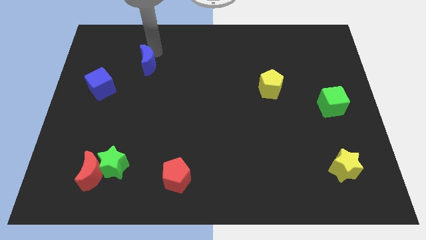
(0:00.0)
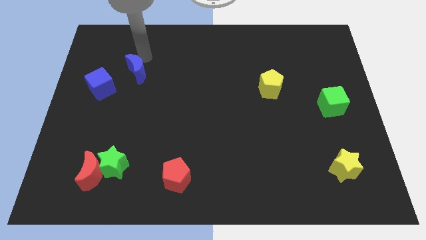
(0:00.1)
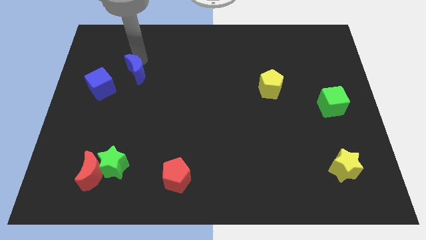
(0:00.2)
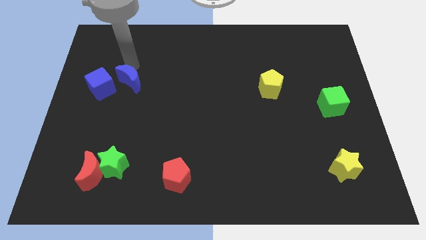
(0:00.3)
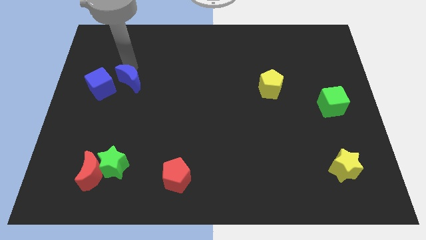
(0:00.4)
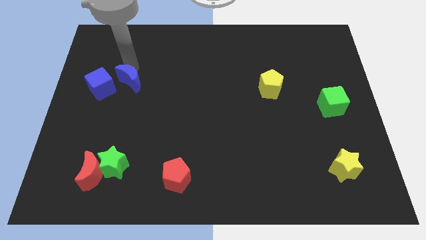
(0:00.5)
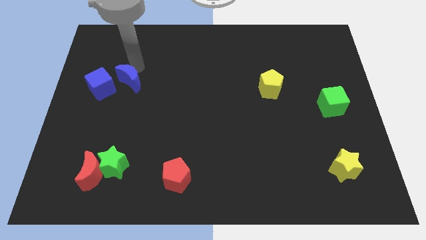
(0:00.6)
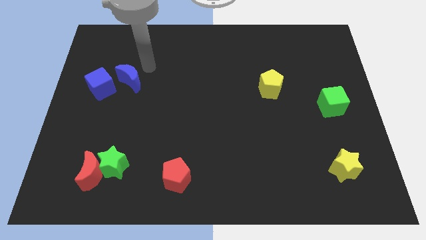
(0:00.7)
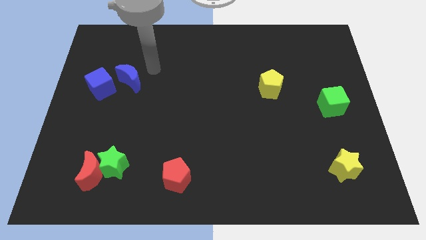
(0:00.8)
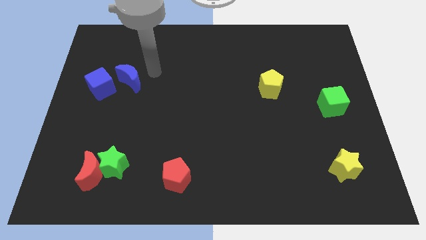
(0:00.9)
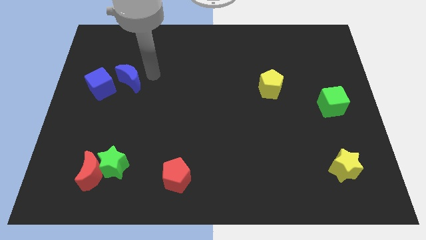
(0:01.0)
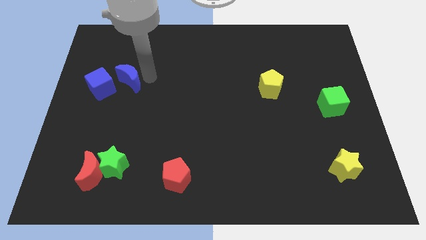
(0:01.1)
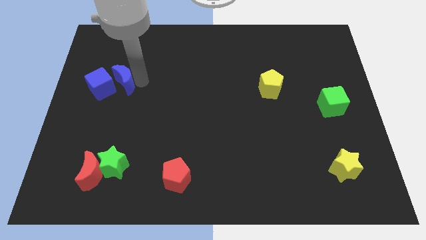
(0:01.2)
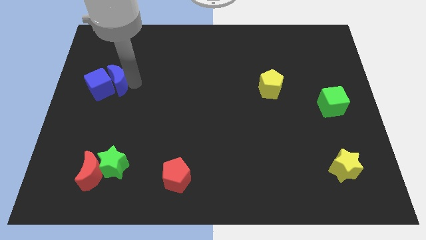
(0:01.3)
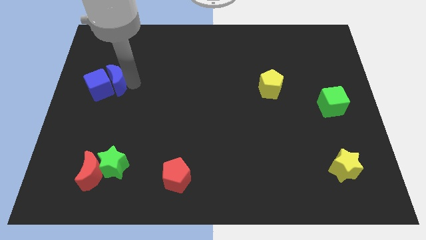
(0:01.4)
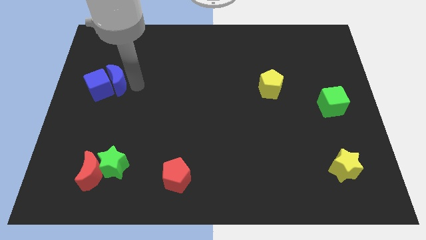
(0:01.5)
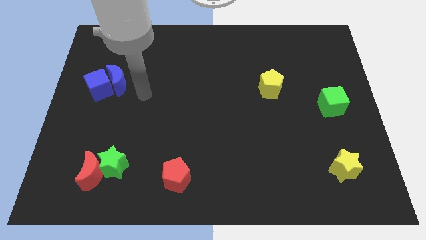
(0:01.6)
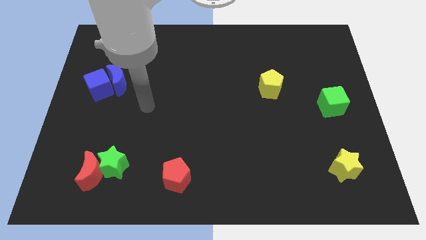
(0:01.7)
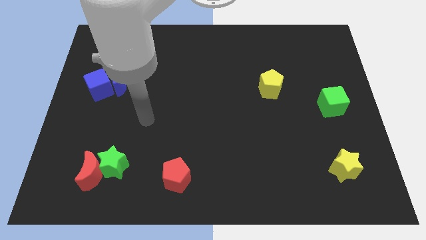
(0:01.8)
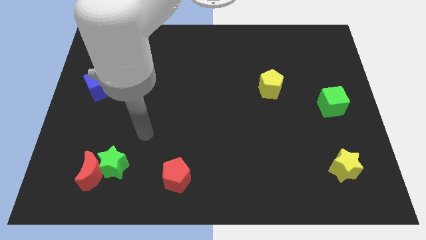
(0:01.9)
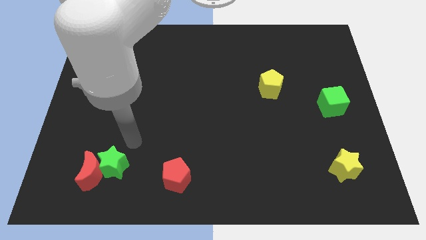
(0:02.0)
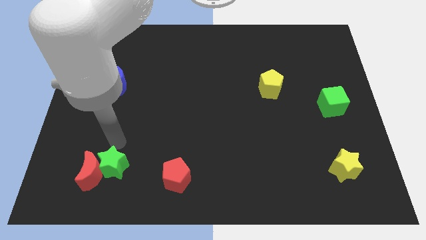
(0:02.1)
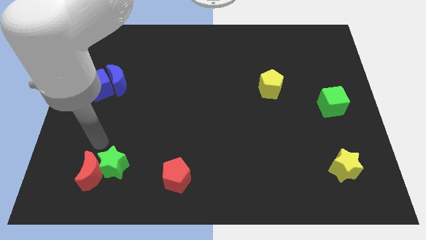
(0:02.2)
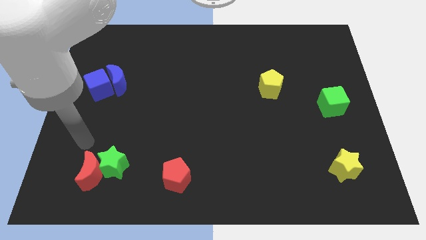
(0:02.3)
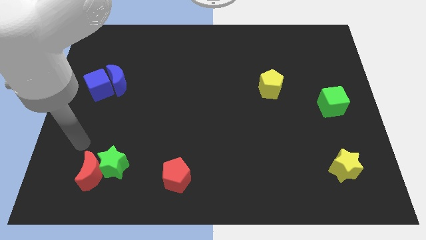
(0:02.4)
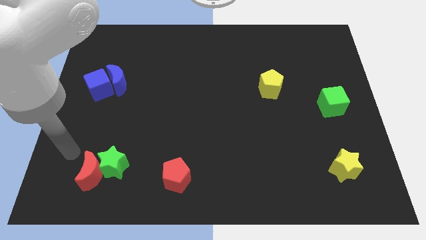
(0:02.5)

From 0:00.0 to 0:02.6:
push the blue crescent into the blue cube

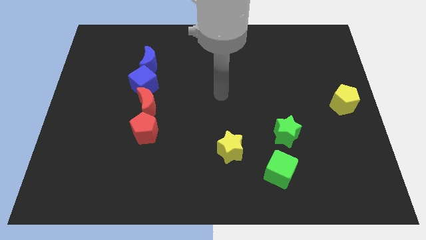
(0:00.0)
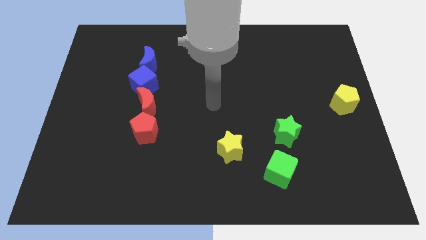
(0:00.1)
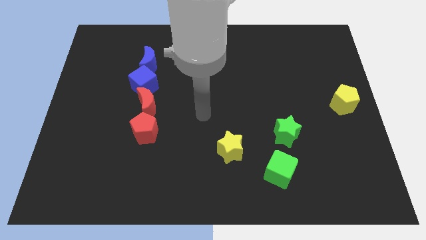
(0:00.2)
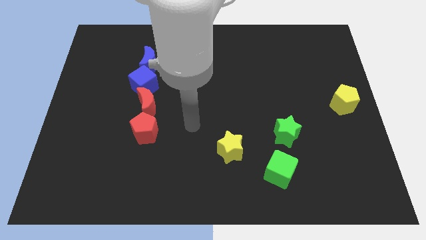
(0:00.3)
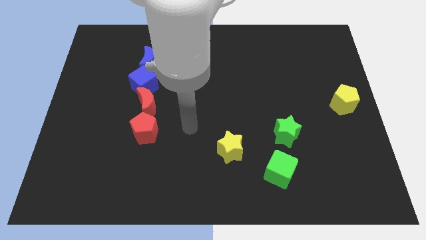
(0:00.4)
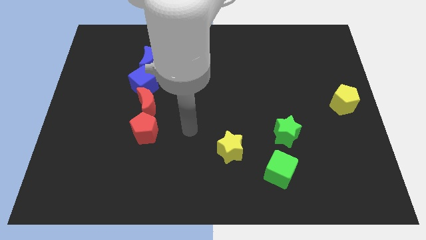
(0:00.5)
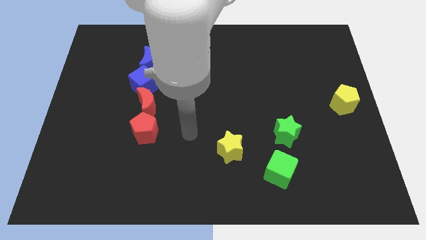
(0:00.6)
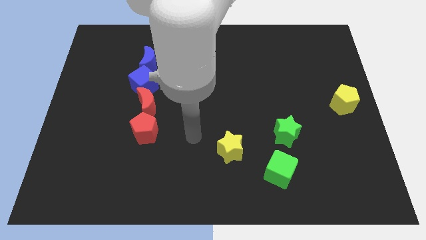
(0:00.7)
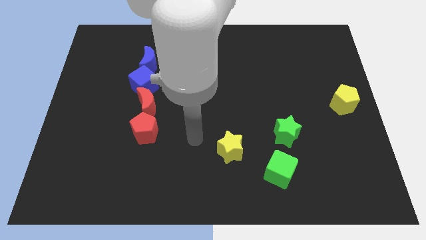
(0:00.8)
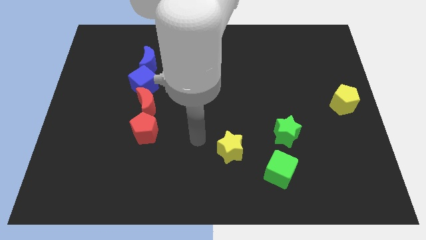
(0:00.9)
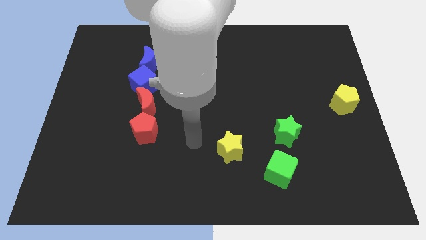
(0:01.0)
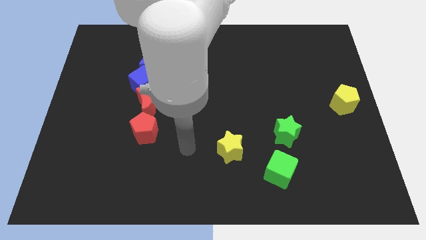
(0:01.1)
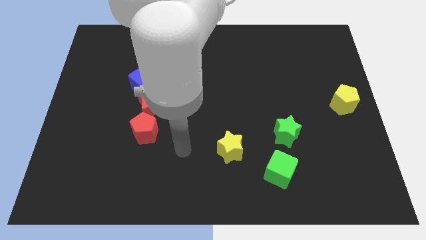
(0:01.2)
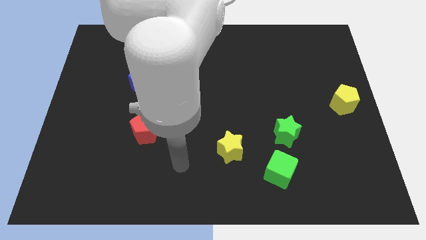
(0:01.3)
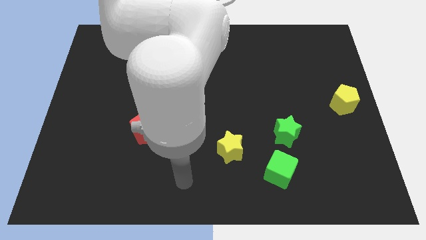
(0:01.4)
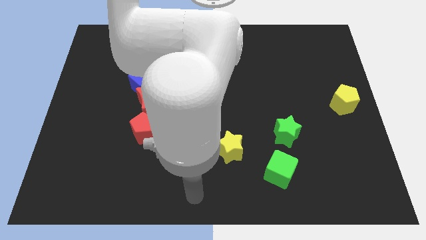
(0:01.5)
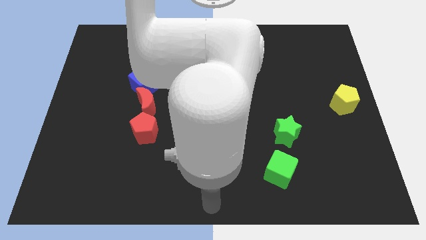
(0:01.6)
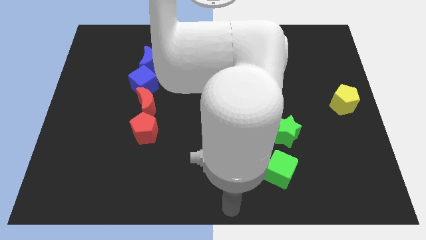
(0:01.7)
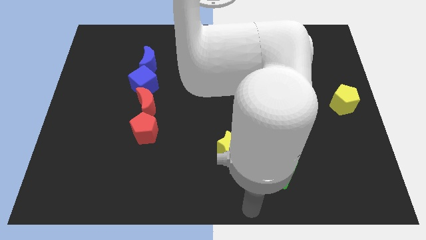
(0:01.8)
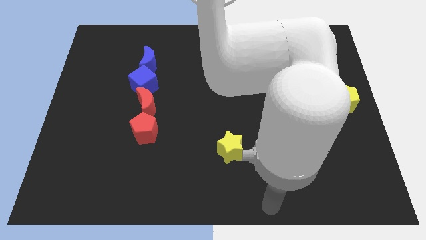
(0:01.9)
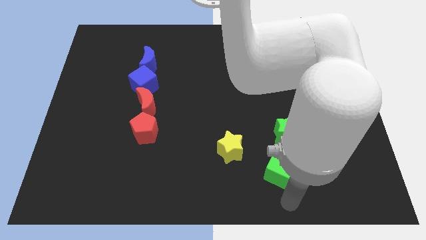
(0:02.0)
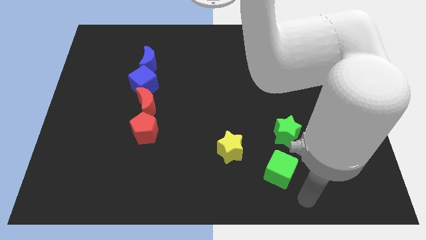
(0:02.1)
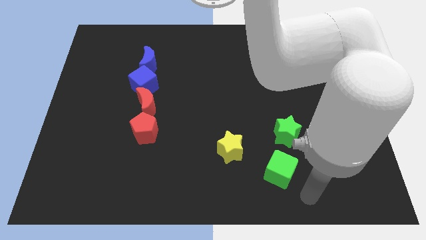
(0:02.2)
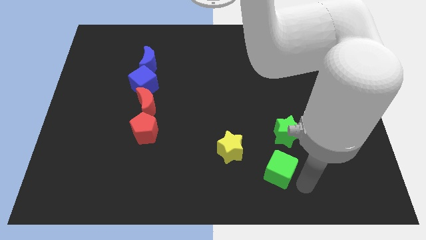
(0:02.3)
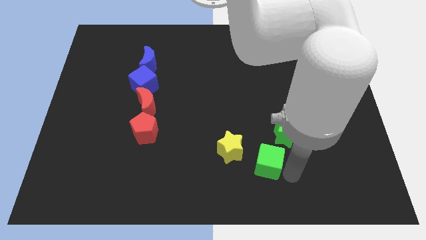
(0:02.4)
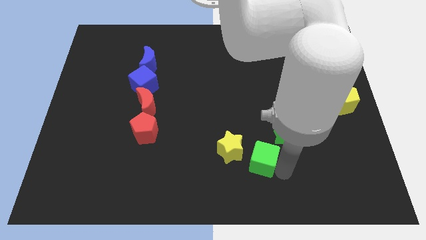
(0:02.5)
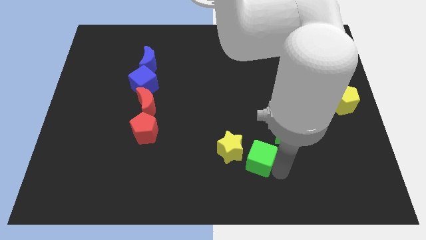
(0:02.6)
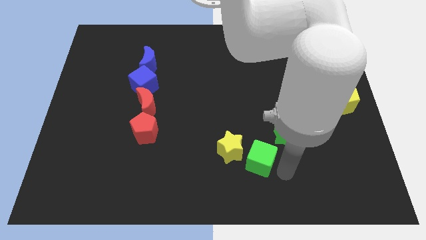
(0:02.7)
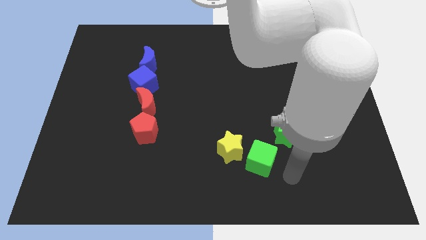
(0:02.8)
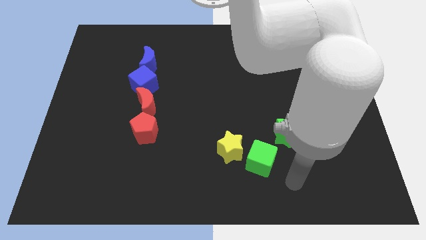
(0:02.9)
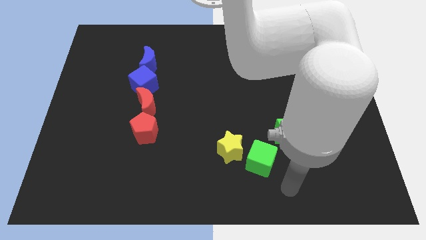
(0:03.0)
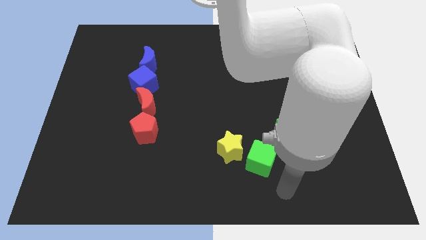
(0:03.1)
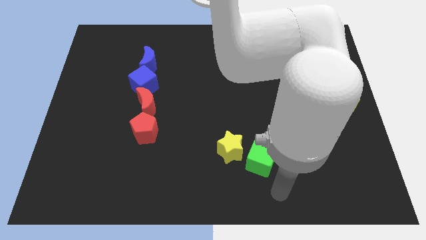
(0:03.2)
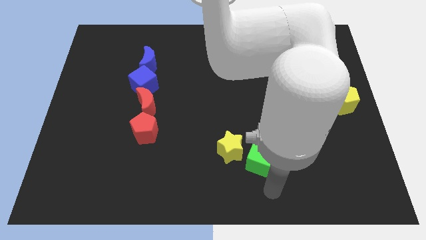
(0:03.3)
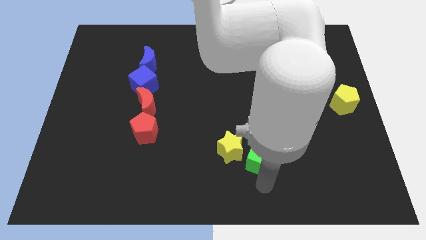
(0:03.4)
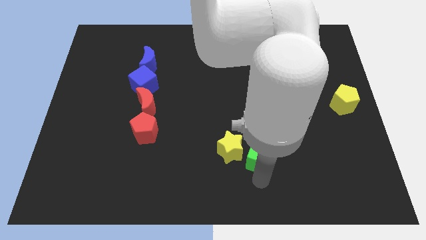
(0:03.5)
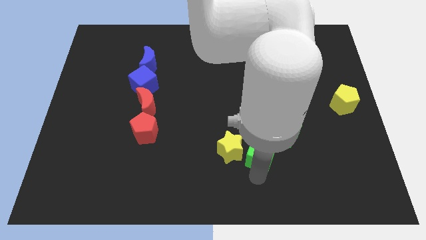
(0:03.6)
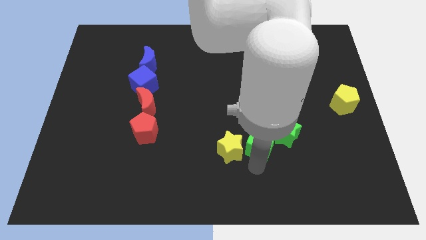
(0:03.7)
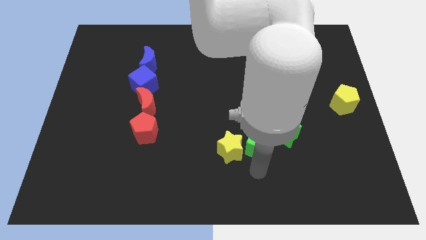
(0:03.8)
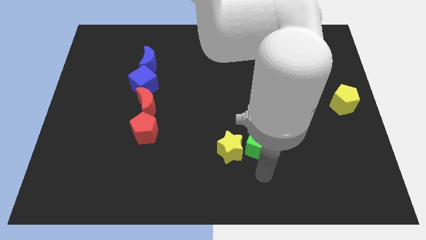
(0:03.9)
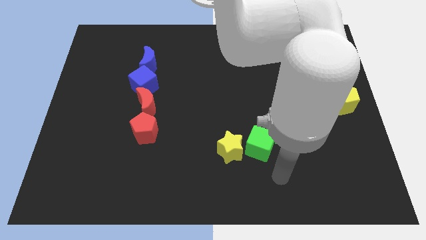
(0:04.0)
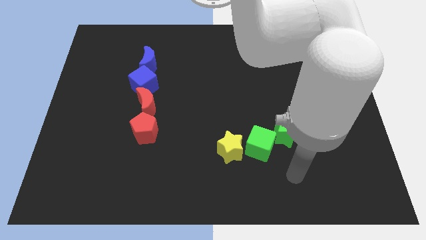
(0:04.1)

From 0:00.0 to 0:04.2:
move the green cube right to the yellow star

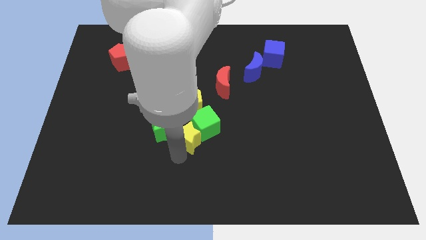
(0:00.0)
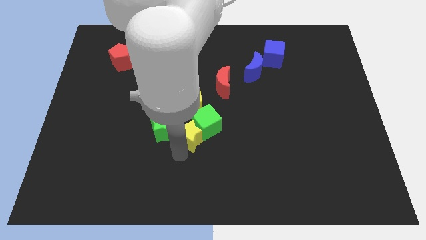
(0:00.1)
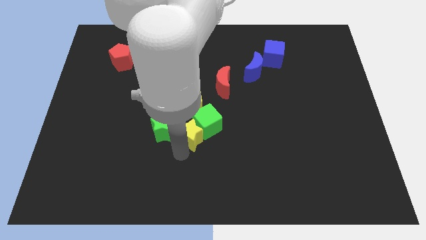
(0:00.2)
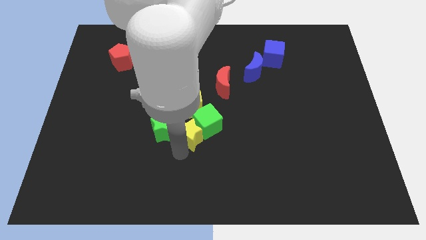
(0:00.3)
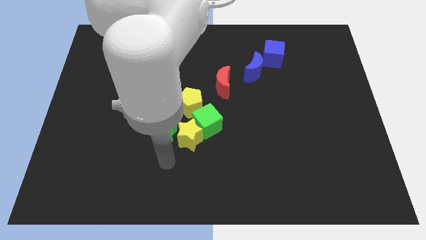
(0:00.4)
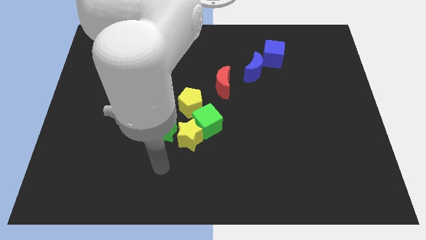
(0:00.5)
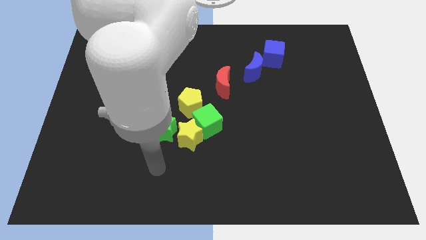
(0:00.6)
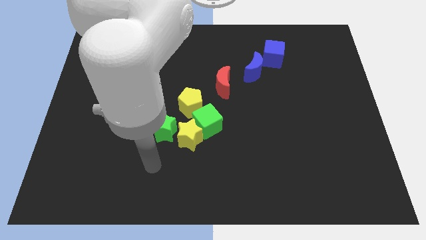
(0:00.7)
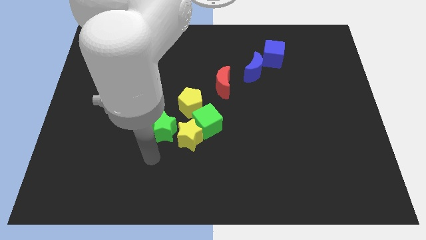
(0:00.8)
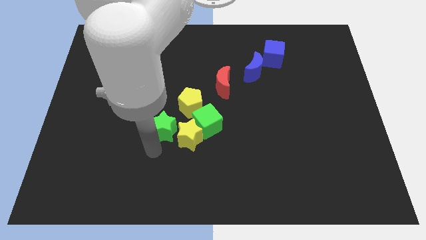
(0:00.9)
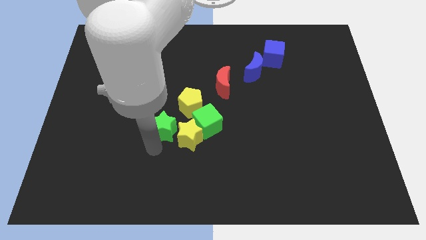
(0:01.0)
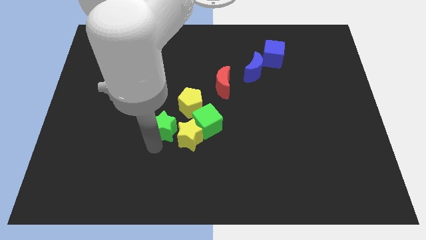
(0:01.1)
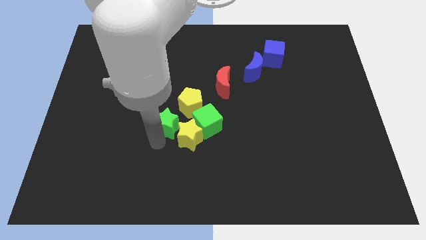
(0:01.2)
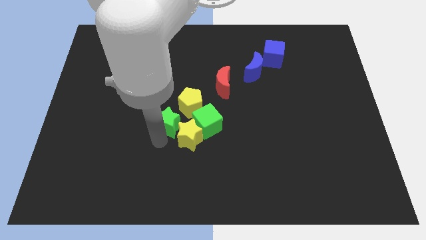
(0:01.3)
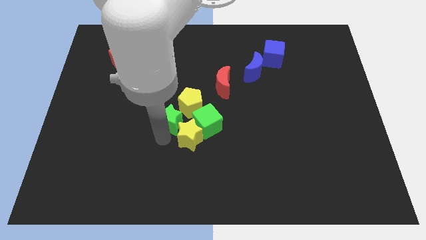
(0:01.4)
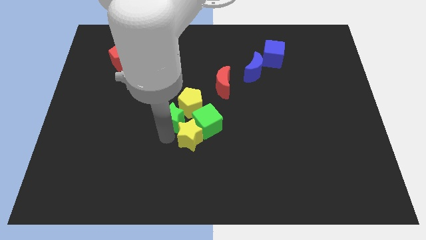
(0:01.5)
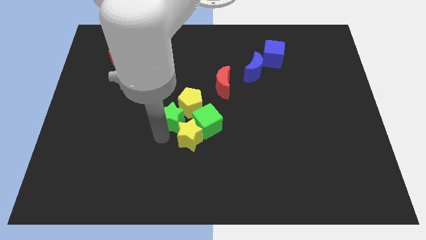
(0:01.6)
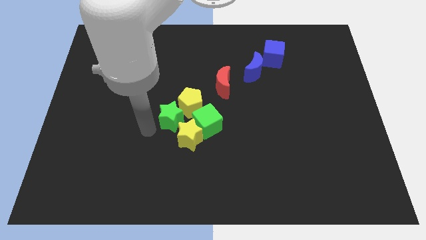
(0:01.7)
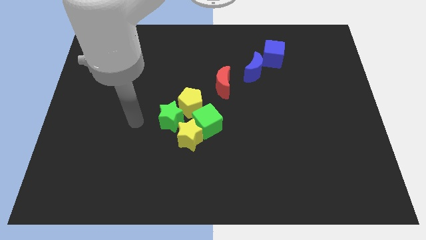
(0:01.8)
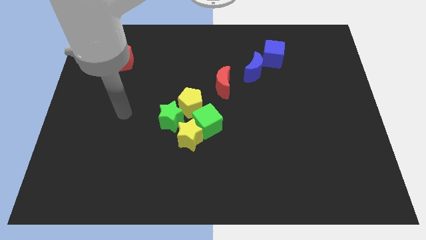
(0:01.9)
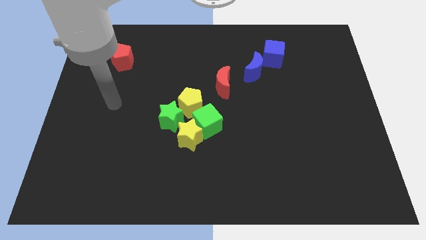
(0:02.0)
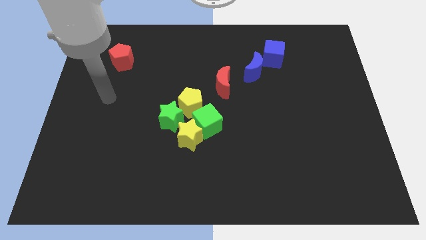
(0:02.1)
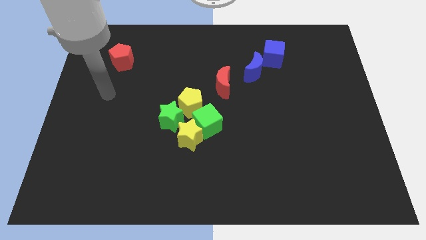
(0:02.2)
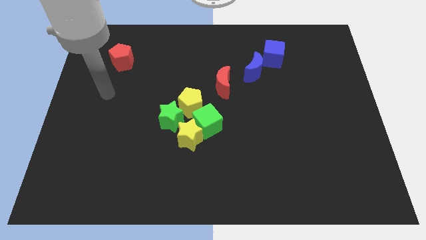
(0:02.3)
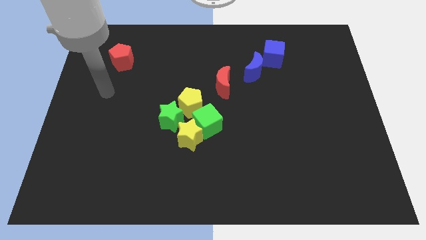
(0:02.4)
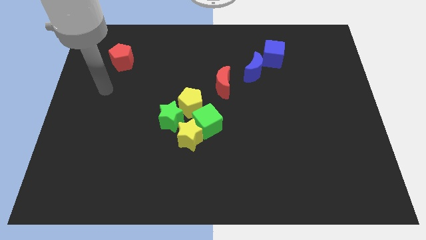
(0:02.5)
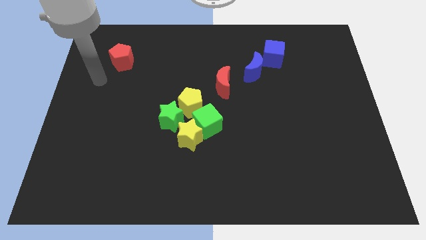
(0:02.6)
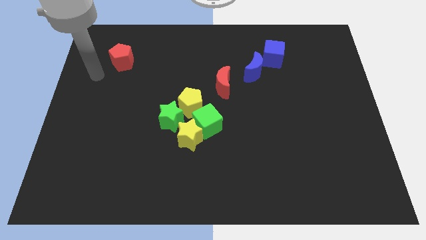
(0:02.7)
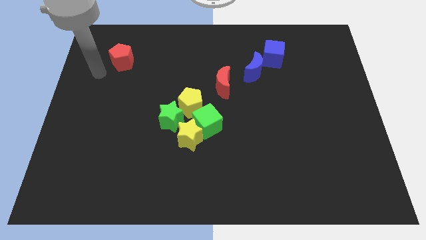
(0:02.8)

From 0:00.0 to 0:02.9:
place green star to the top left of yellow star
